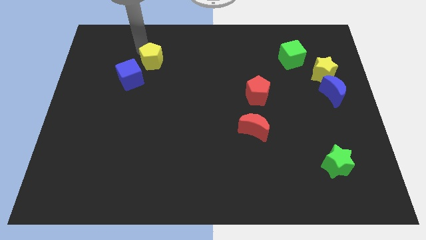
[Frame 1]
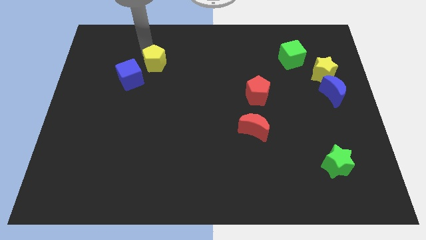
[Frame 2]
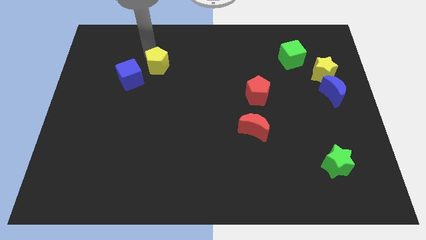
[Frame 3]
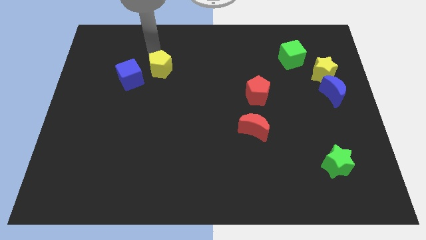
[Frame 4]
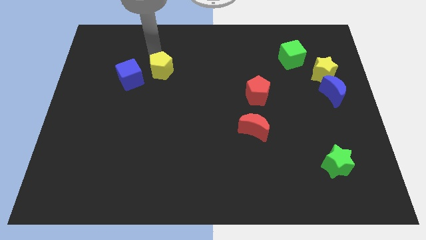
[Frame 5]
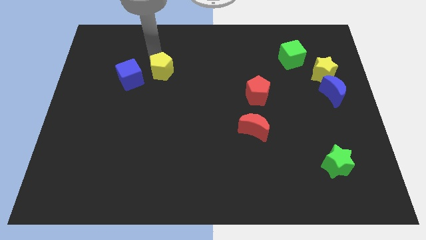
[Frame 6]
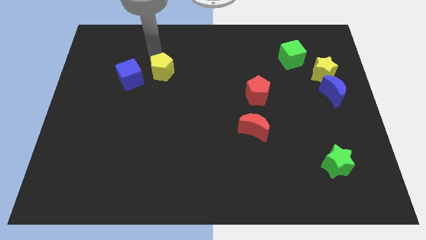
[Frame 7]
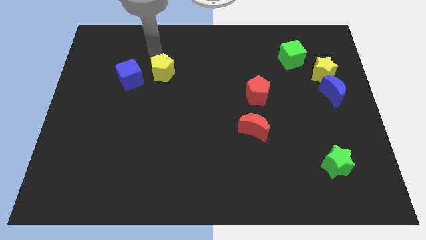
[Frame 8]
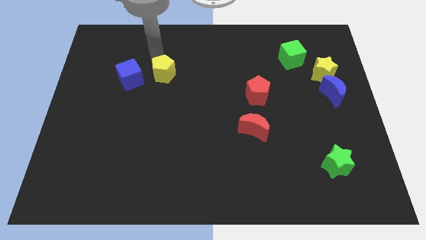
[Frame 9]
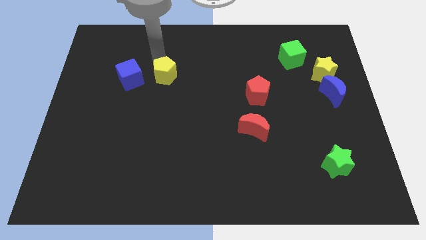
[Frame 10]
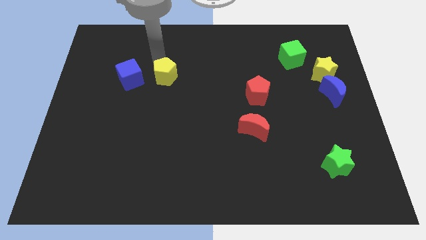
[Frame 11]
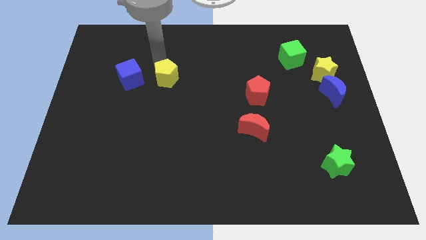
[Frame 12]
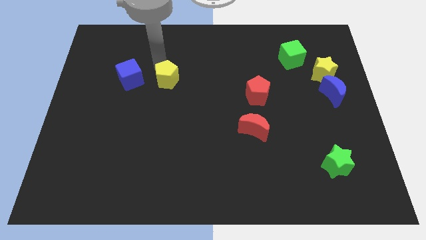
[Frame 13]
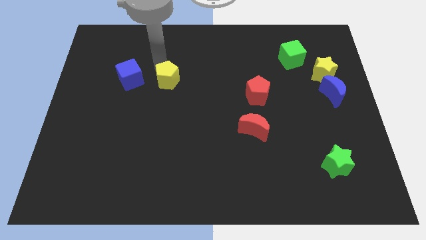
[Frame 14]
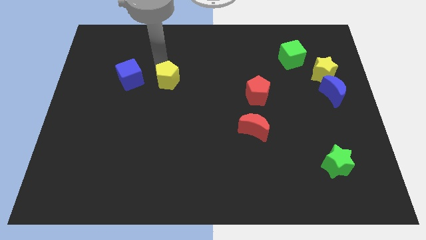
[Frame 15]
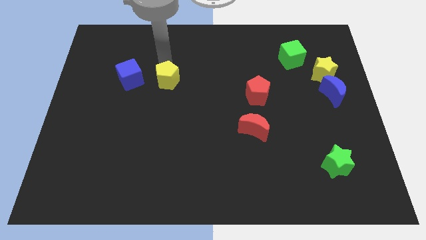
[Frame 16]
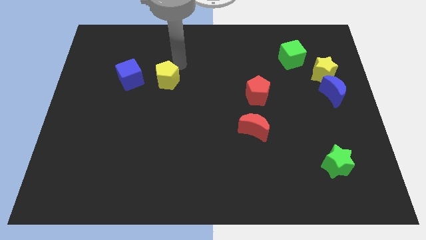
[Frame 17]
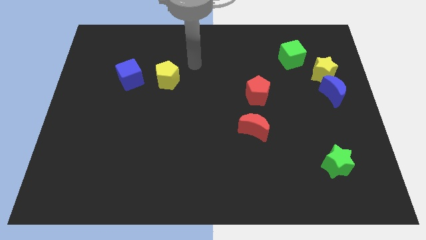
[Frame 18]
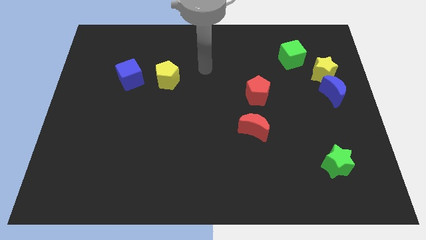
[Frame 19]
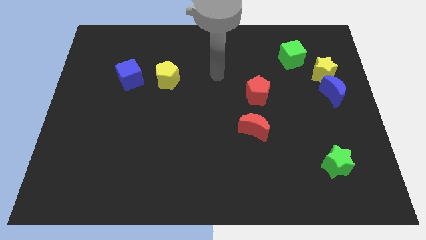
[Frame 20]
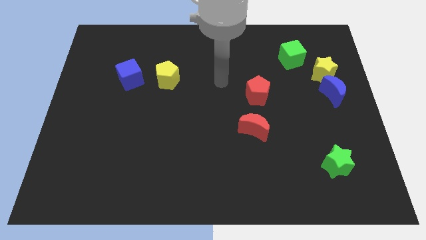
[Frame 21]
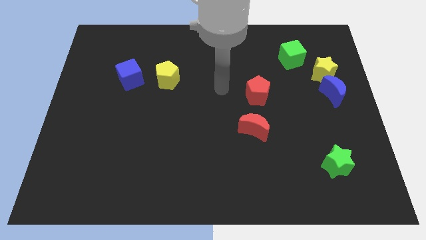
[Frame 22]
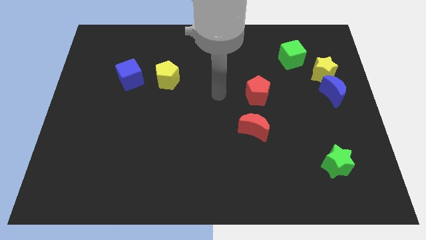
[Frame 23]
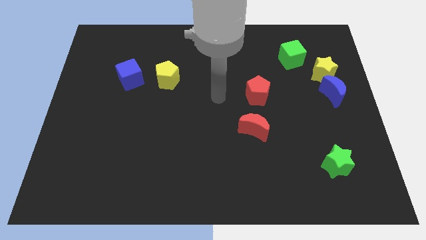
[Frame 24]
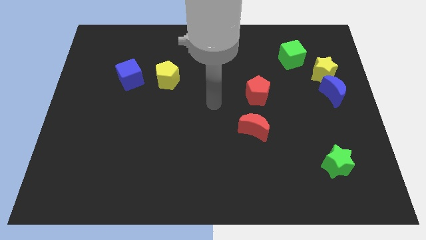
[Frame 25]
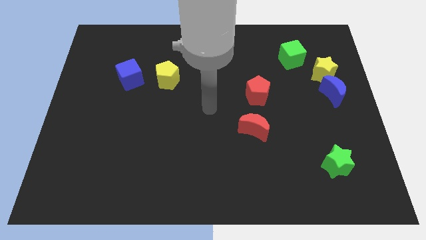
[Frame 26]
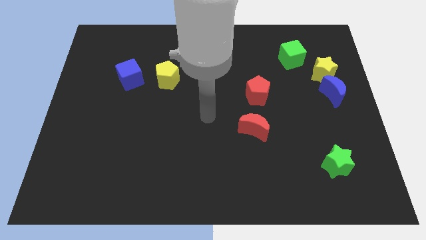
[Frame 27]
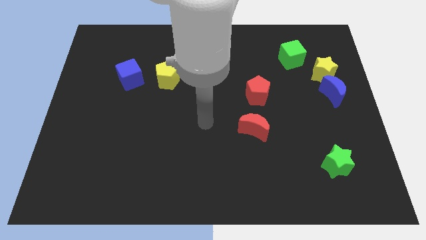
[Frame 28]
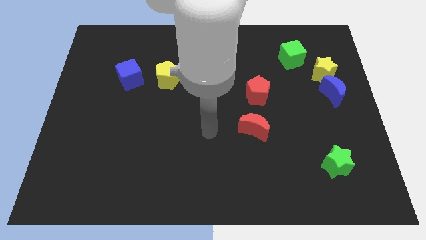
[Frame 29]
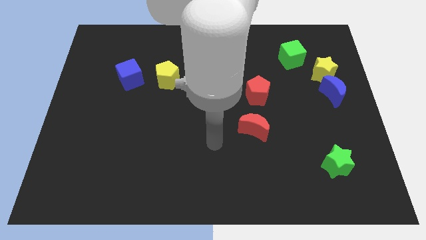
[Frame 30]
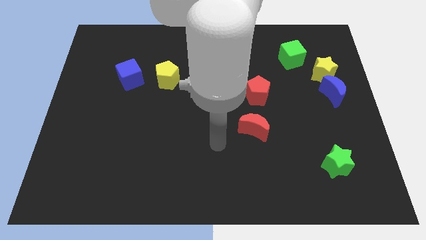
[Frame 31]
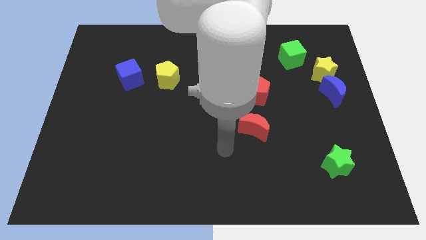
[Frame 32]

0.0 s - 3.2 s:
move yellow pentagon beside blue cube

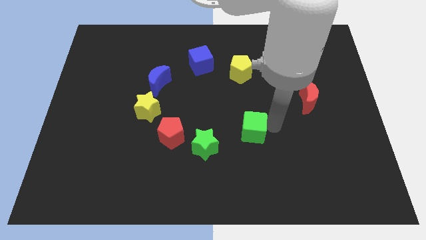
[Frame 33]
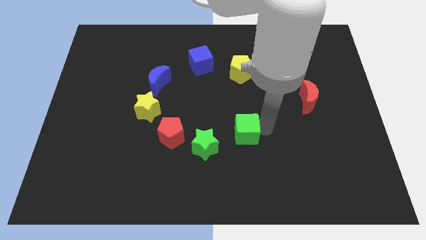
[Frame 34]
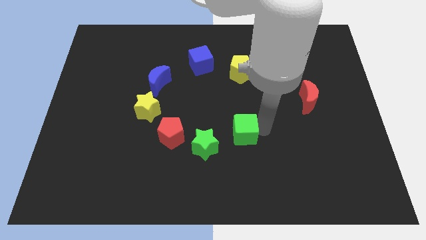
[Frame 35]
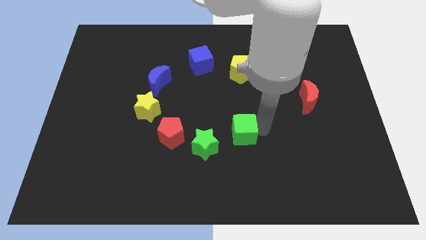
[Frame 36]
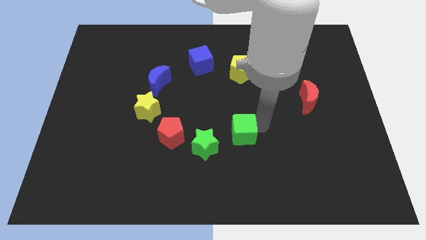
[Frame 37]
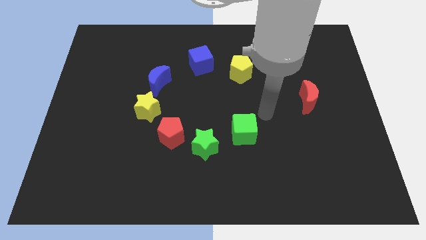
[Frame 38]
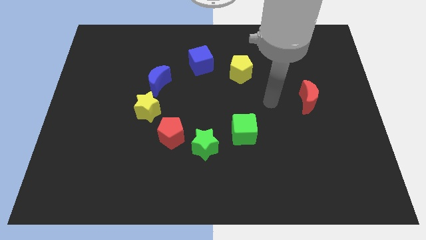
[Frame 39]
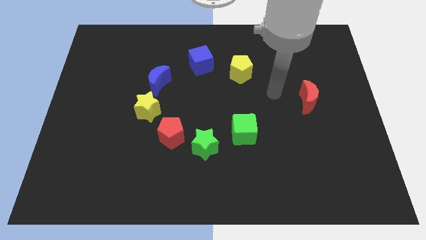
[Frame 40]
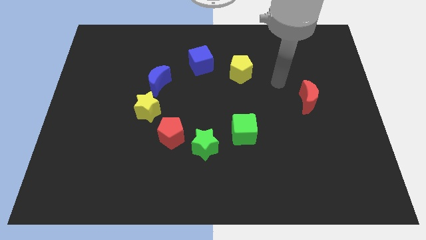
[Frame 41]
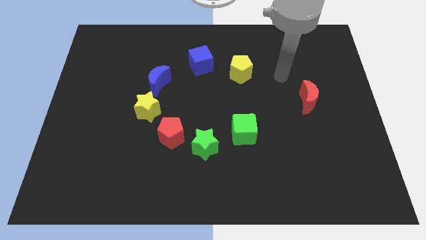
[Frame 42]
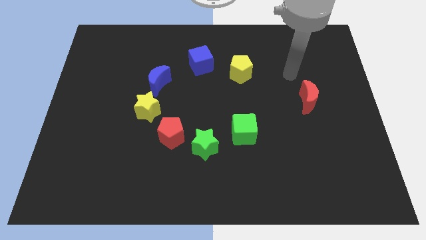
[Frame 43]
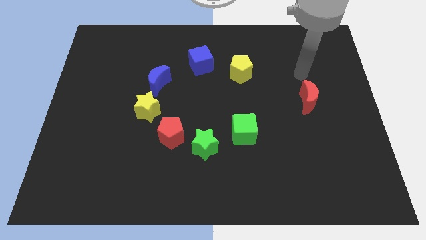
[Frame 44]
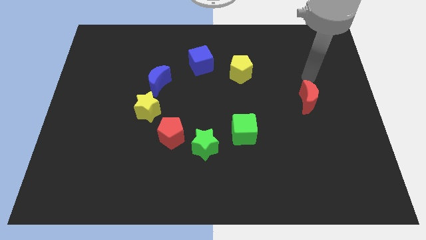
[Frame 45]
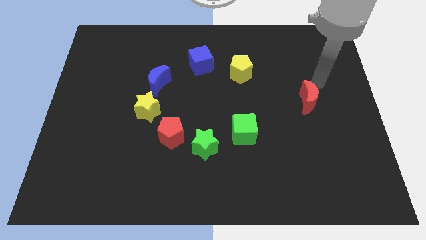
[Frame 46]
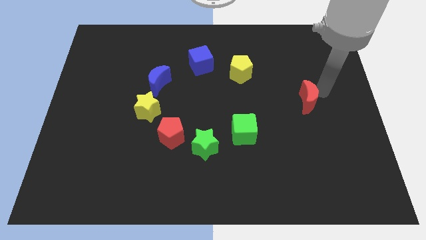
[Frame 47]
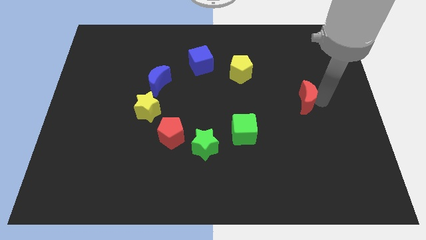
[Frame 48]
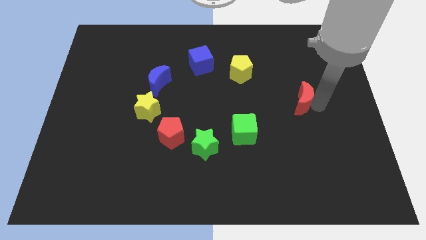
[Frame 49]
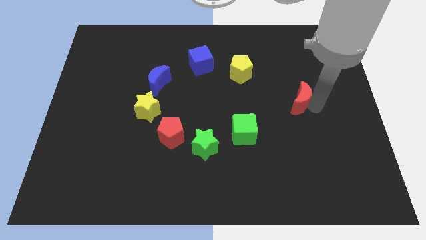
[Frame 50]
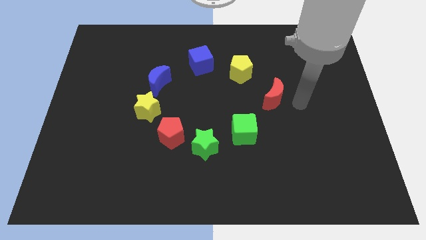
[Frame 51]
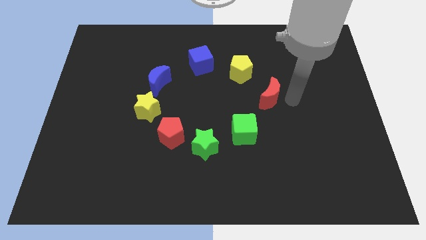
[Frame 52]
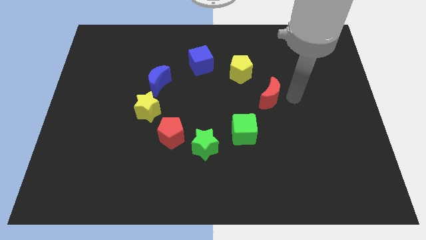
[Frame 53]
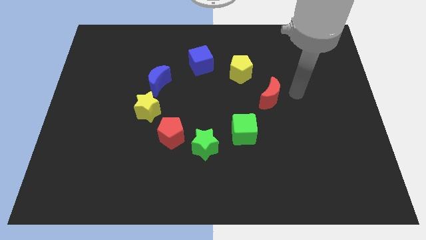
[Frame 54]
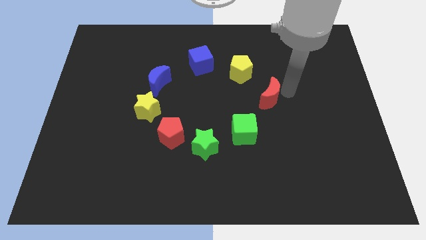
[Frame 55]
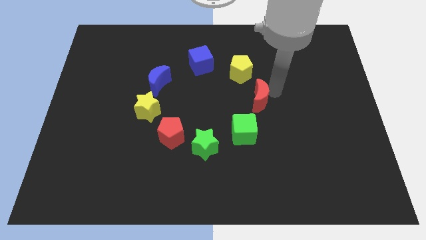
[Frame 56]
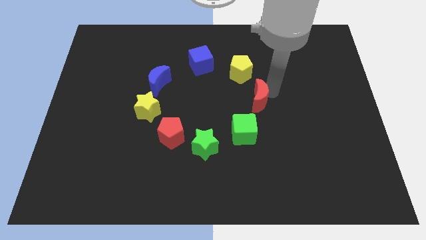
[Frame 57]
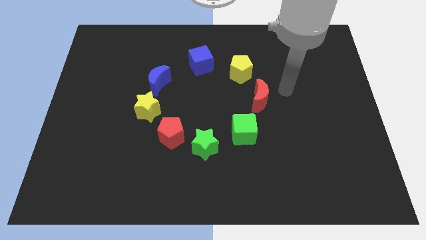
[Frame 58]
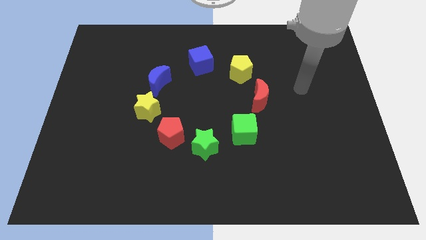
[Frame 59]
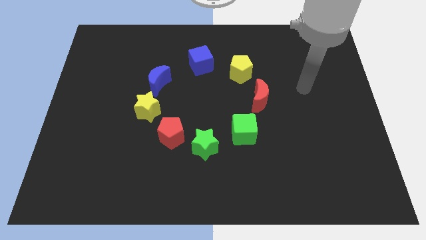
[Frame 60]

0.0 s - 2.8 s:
slightly move the red moon towards the left

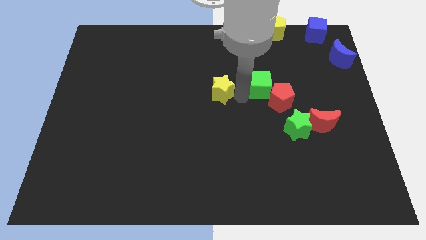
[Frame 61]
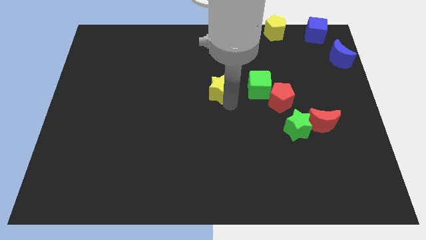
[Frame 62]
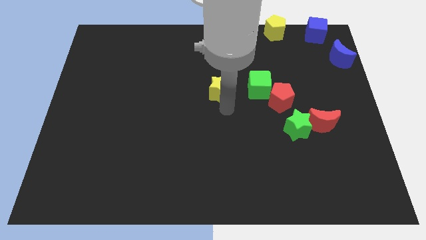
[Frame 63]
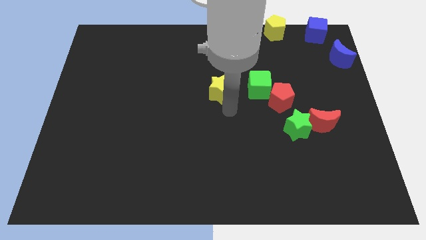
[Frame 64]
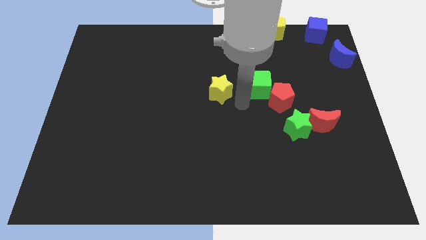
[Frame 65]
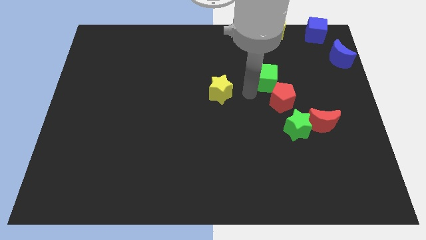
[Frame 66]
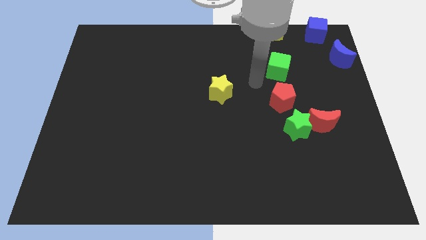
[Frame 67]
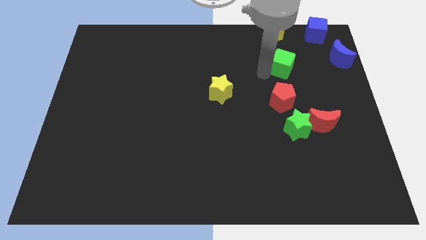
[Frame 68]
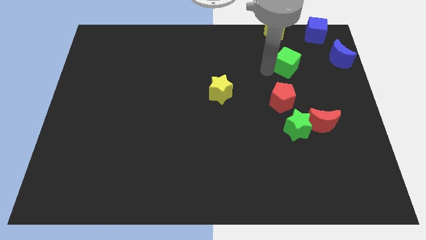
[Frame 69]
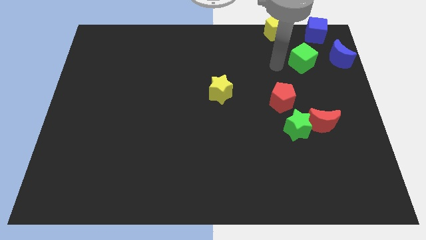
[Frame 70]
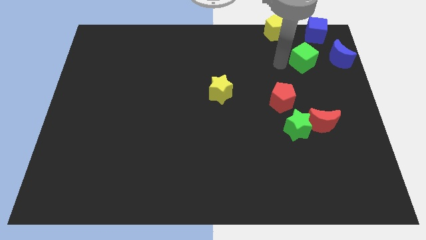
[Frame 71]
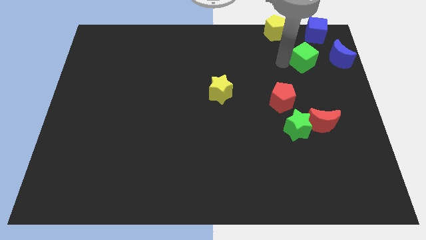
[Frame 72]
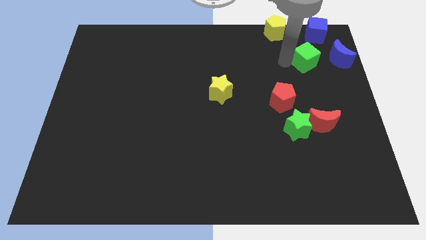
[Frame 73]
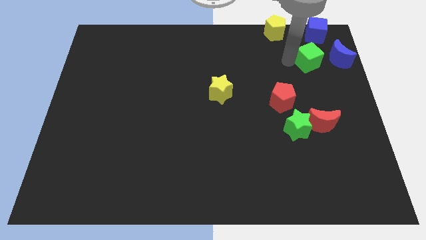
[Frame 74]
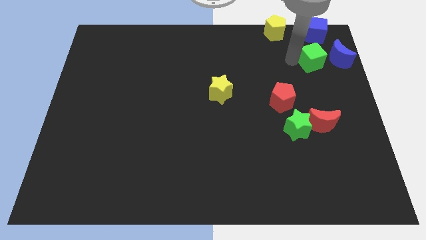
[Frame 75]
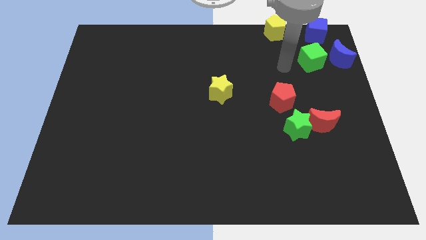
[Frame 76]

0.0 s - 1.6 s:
place the green cube at the top right center

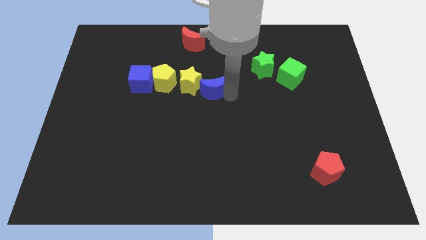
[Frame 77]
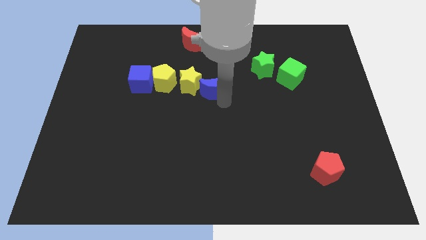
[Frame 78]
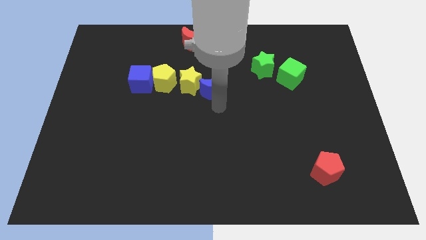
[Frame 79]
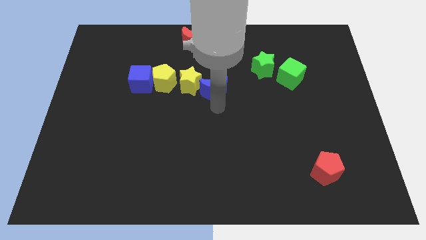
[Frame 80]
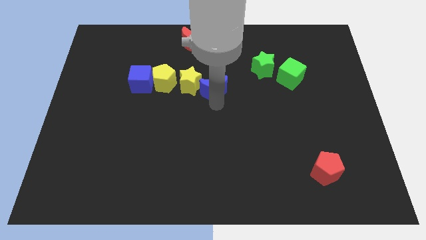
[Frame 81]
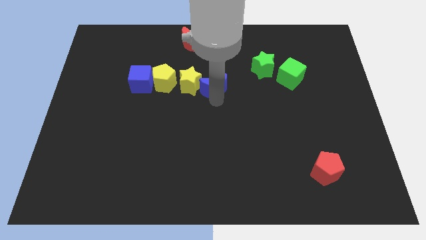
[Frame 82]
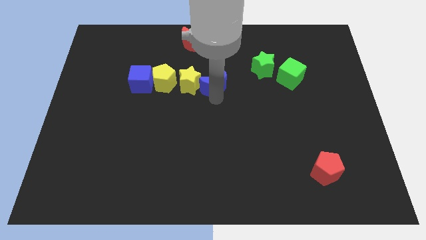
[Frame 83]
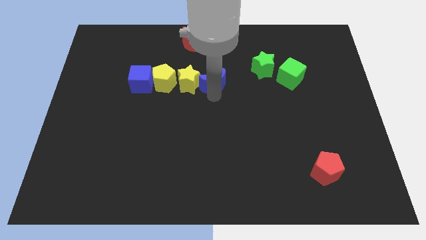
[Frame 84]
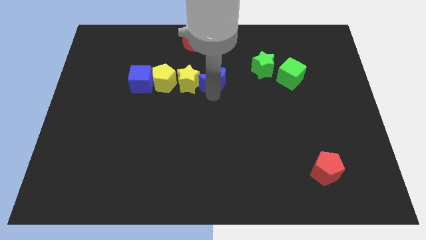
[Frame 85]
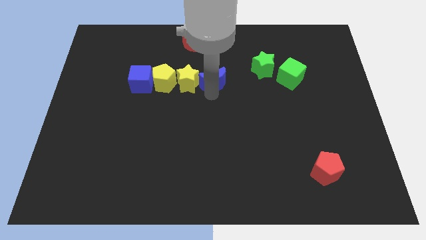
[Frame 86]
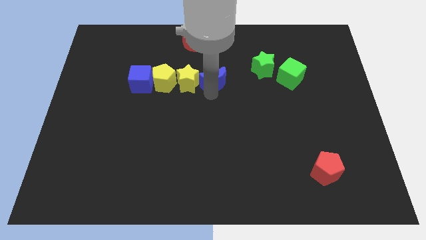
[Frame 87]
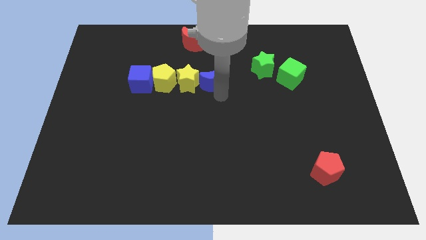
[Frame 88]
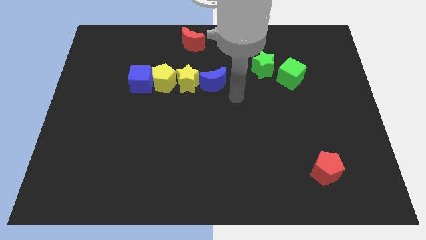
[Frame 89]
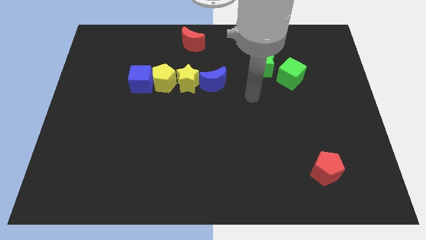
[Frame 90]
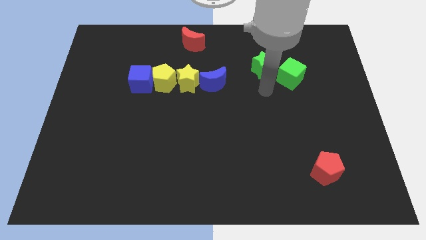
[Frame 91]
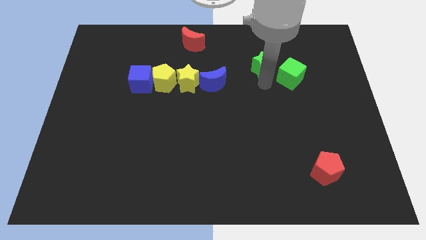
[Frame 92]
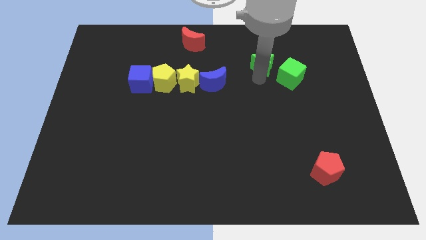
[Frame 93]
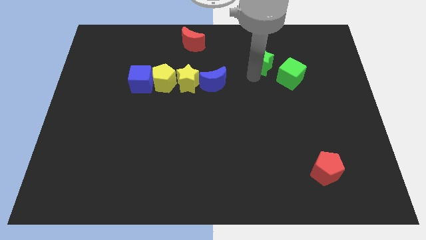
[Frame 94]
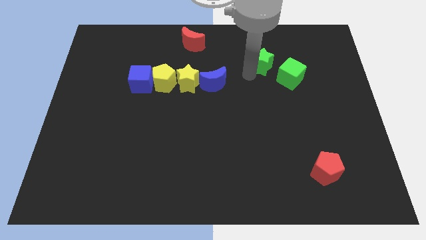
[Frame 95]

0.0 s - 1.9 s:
place the blue crescent towards the right side of the yellow star
